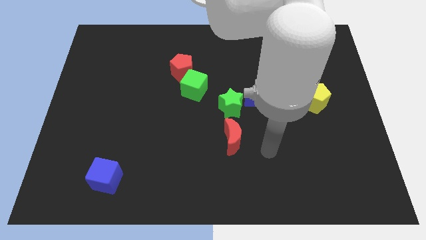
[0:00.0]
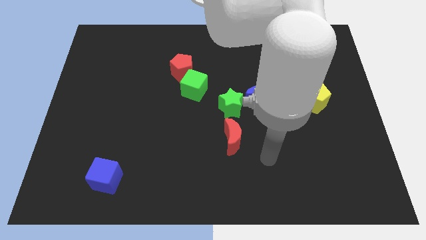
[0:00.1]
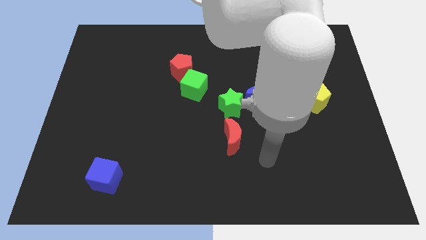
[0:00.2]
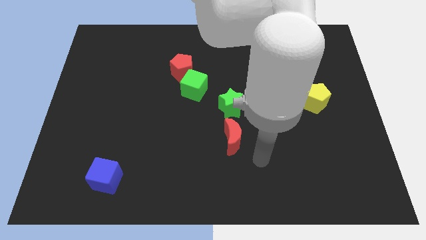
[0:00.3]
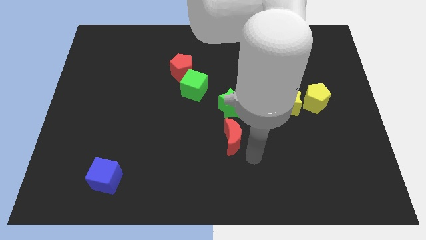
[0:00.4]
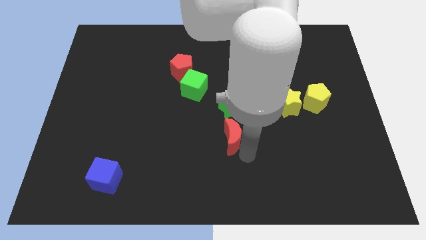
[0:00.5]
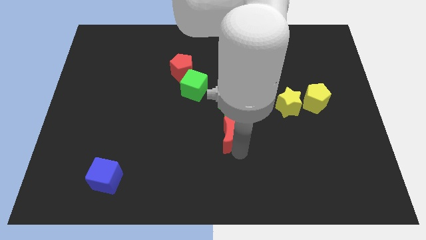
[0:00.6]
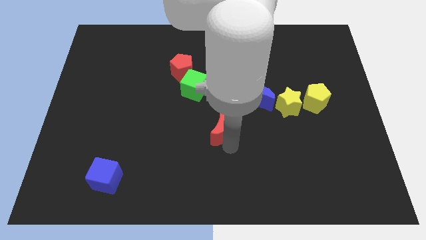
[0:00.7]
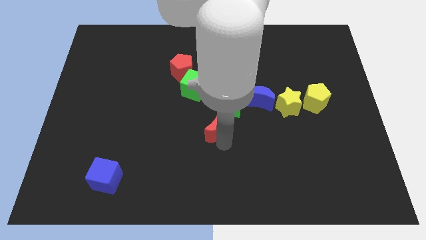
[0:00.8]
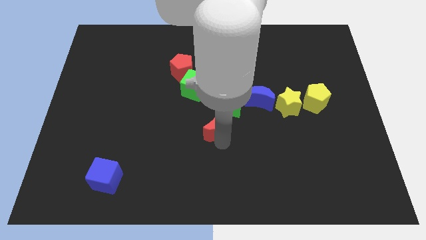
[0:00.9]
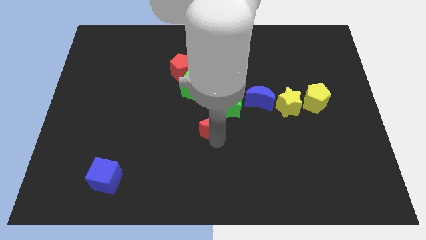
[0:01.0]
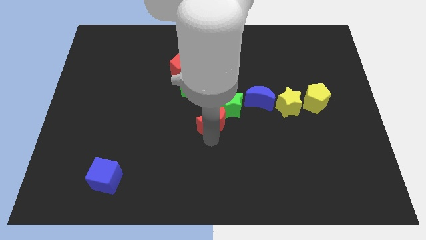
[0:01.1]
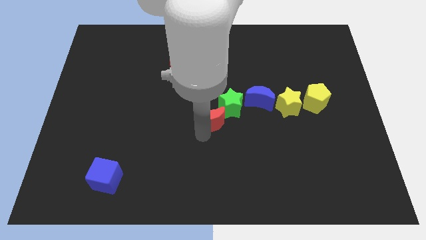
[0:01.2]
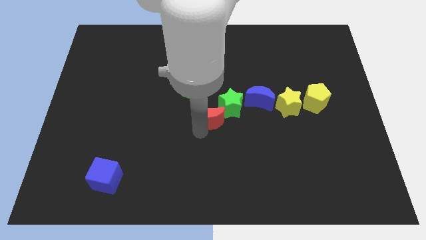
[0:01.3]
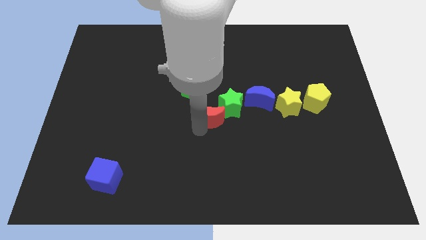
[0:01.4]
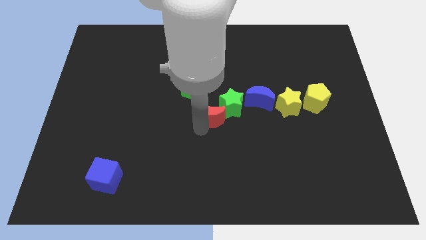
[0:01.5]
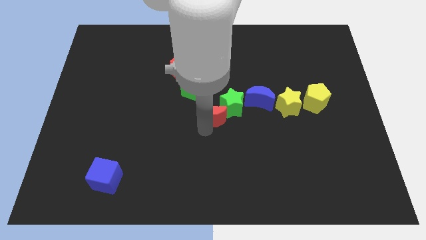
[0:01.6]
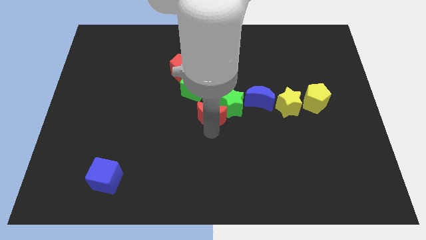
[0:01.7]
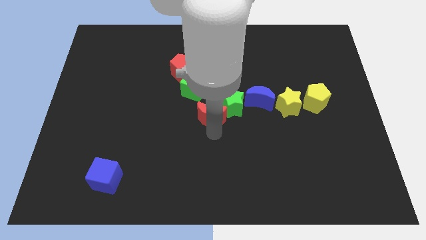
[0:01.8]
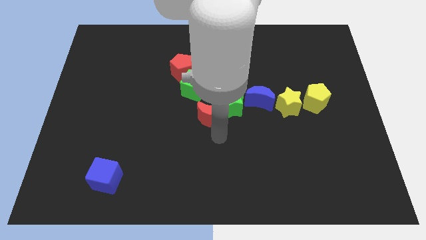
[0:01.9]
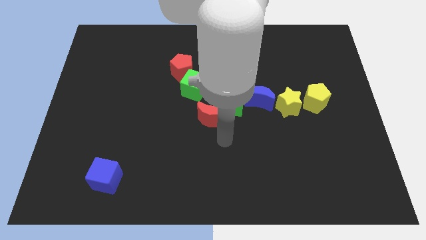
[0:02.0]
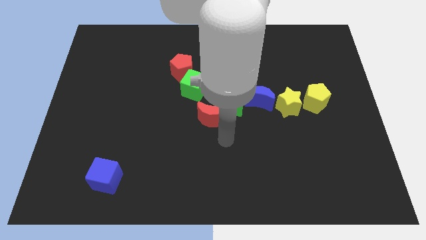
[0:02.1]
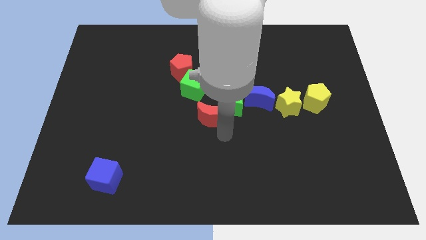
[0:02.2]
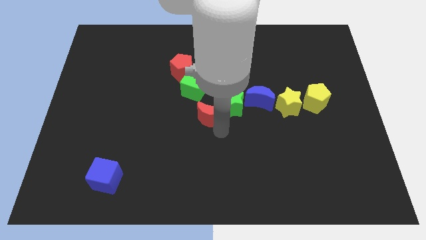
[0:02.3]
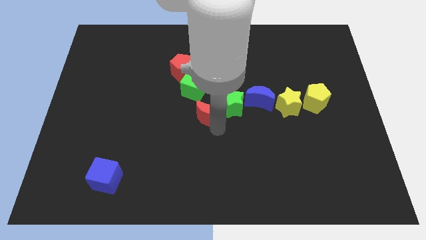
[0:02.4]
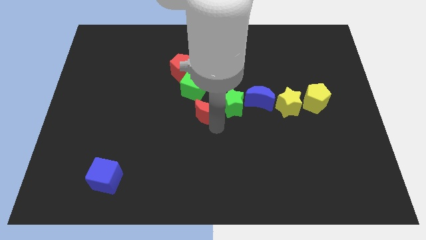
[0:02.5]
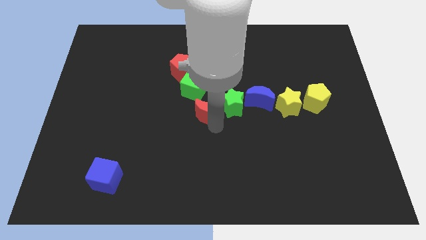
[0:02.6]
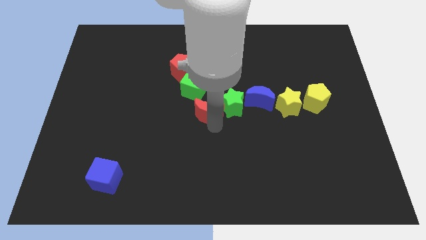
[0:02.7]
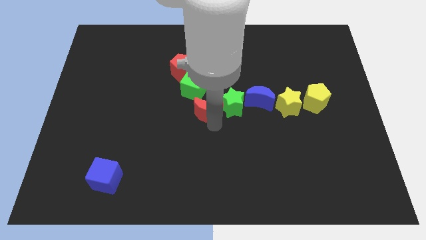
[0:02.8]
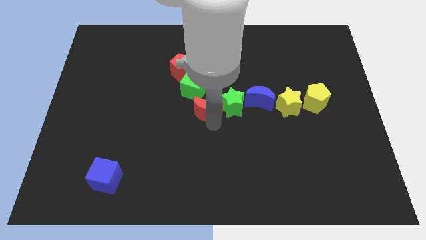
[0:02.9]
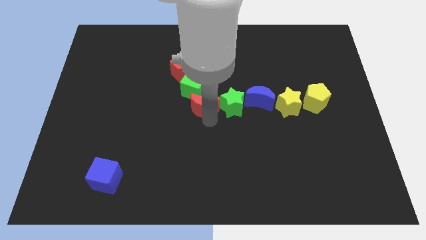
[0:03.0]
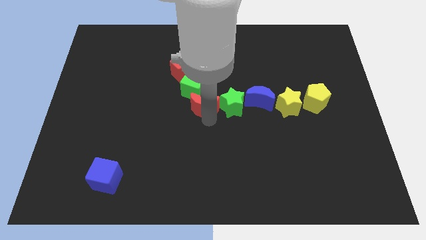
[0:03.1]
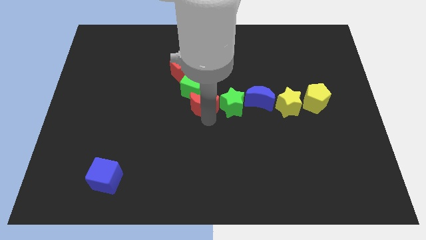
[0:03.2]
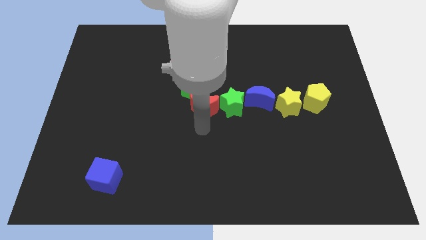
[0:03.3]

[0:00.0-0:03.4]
push red crescent beside green star

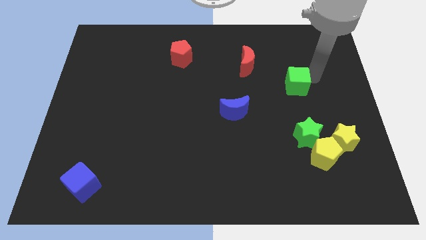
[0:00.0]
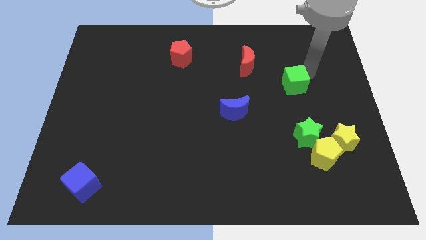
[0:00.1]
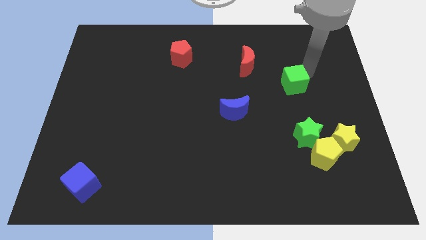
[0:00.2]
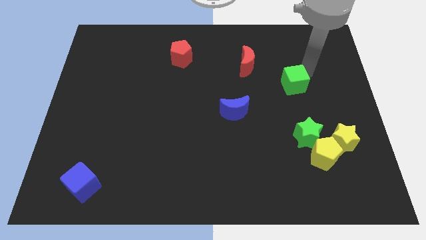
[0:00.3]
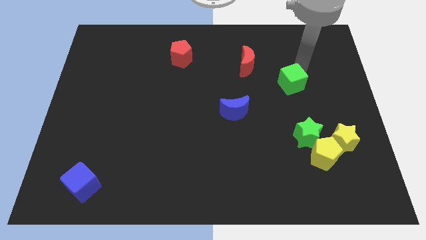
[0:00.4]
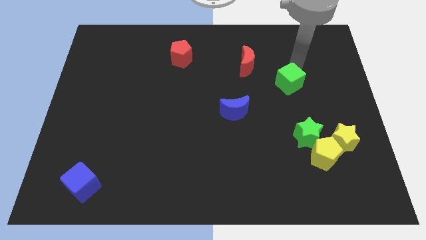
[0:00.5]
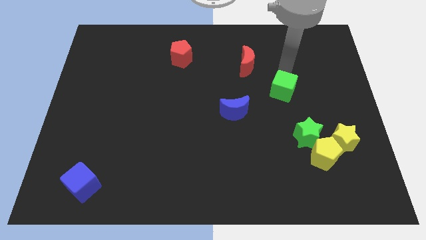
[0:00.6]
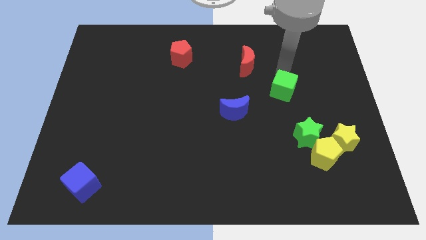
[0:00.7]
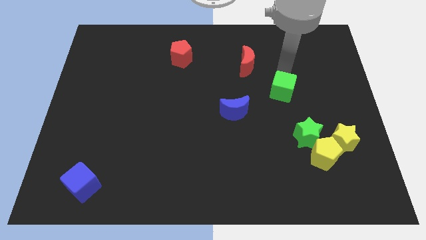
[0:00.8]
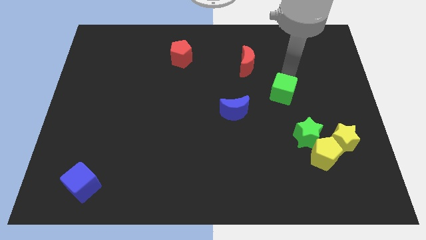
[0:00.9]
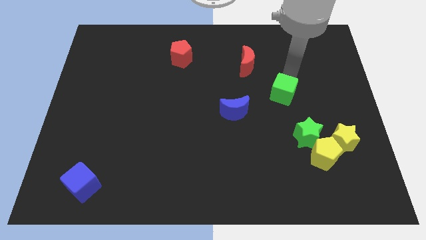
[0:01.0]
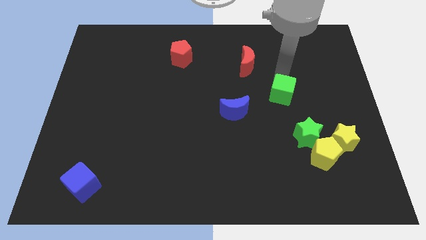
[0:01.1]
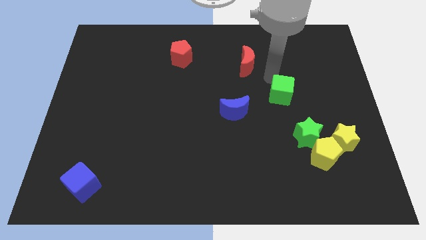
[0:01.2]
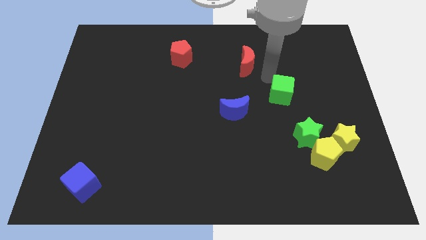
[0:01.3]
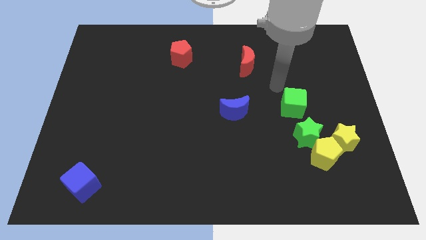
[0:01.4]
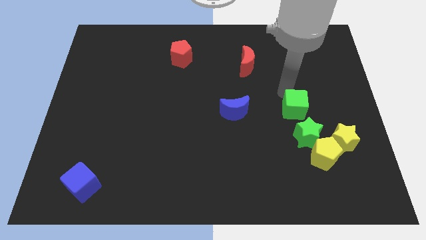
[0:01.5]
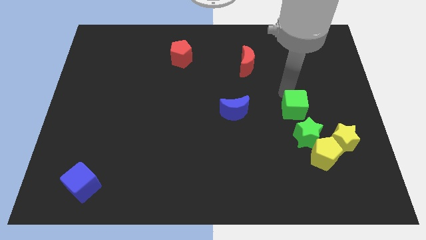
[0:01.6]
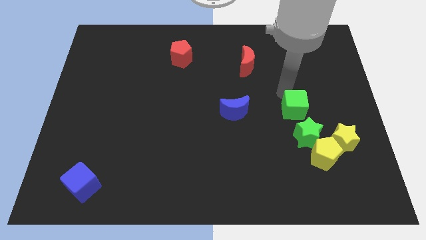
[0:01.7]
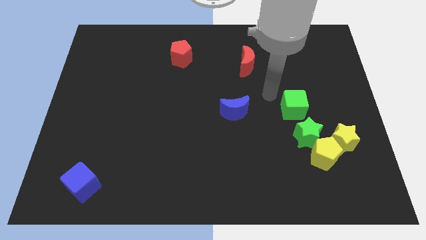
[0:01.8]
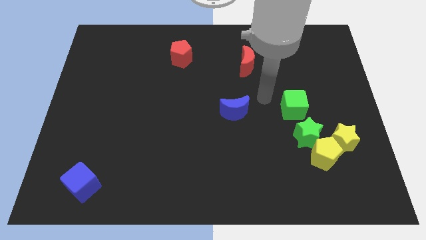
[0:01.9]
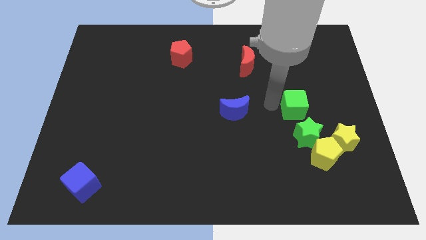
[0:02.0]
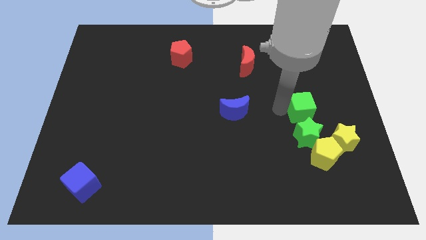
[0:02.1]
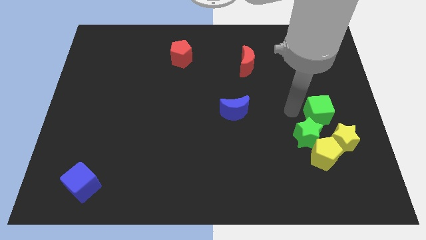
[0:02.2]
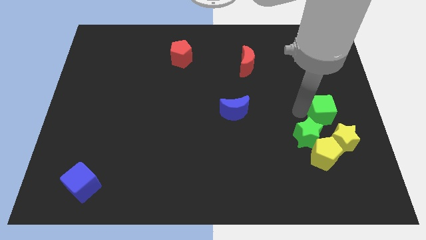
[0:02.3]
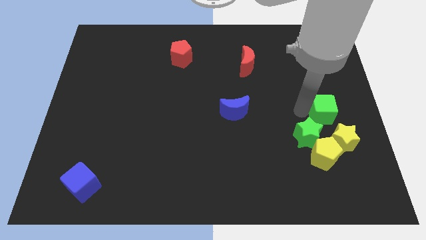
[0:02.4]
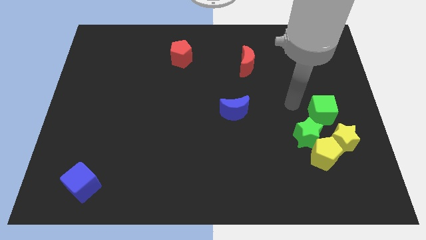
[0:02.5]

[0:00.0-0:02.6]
move the green cube diagonal to the green star

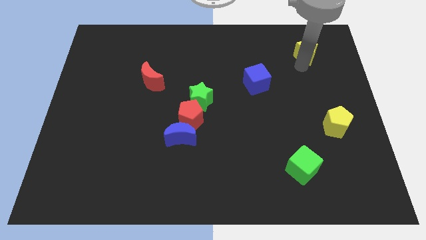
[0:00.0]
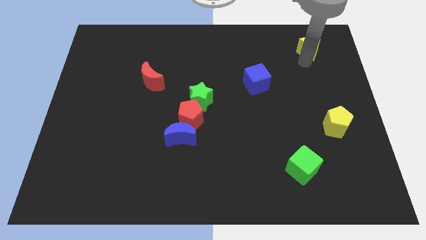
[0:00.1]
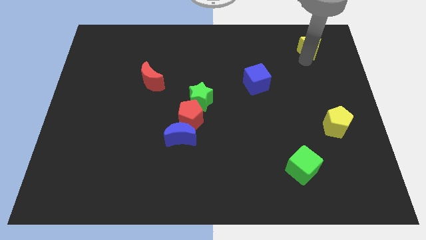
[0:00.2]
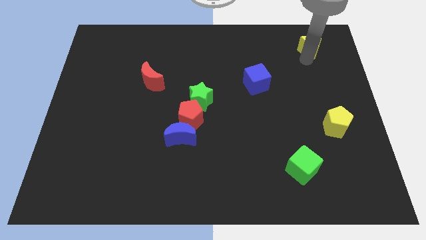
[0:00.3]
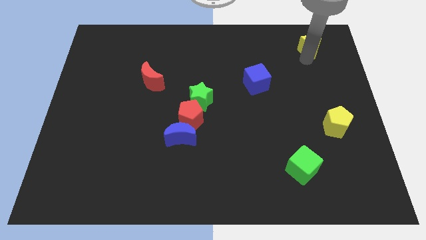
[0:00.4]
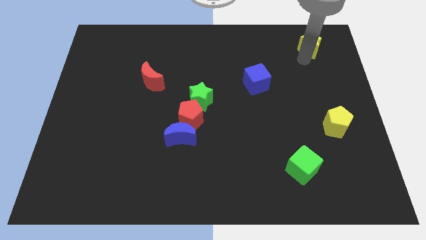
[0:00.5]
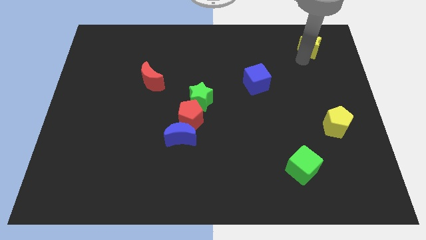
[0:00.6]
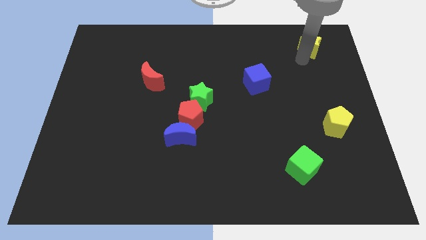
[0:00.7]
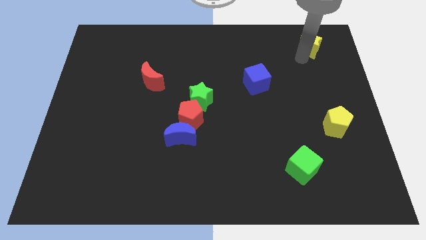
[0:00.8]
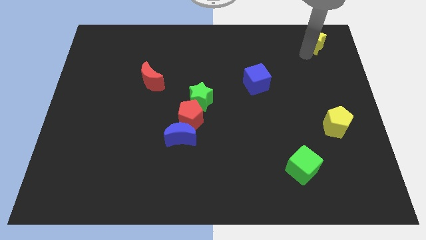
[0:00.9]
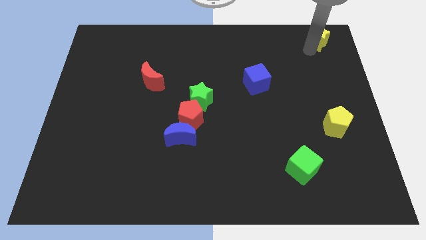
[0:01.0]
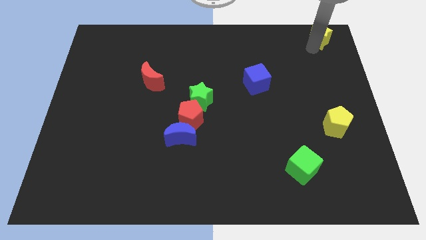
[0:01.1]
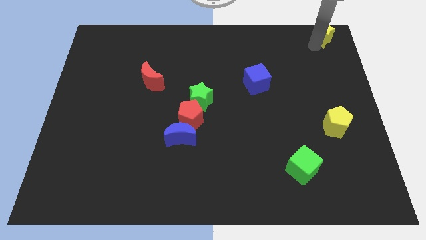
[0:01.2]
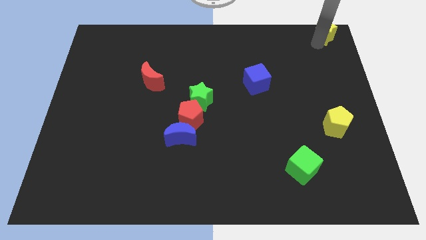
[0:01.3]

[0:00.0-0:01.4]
place the yellow star at the top right corner of the board

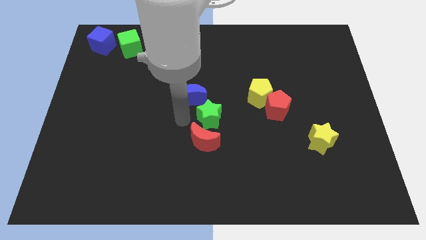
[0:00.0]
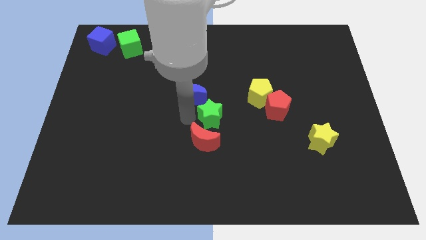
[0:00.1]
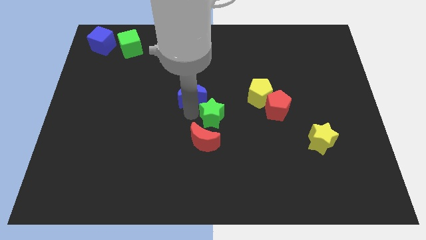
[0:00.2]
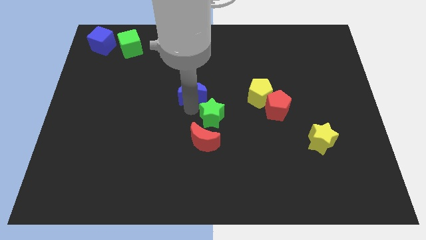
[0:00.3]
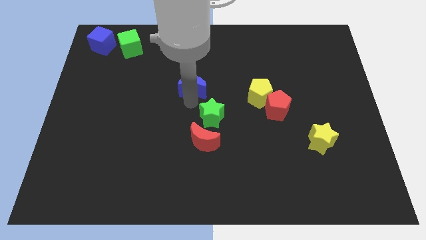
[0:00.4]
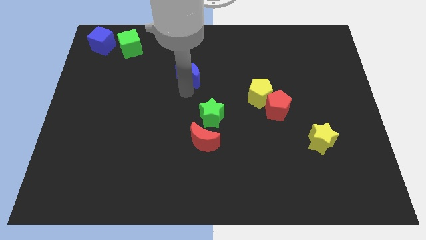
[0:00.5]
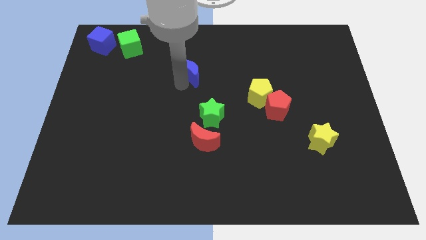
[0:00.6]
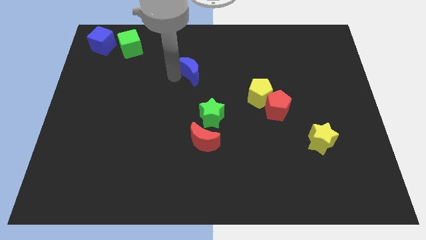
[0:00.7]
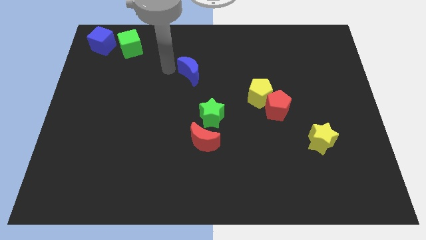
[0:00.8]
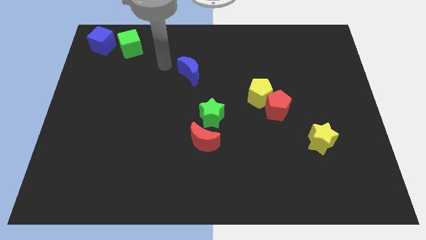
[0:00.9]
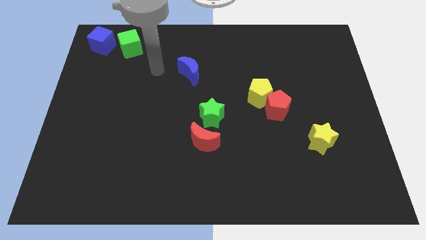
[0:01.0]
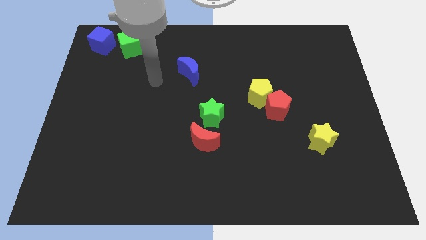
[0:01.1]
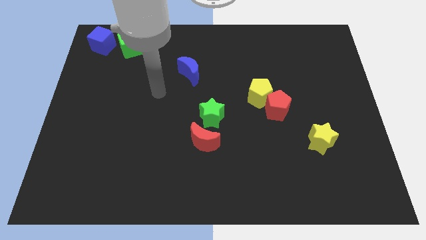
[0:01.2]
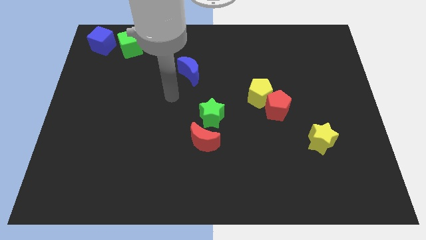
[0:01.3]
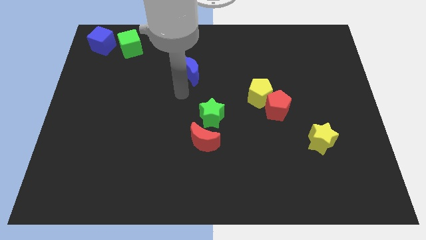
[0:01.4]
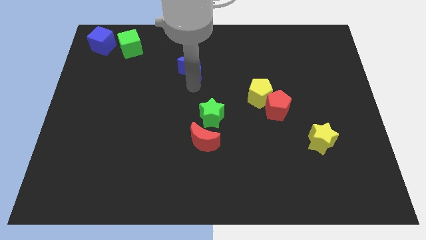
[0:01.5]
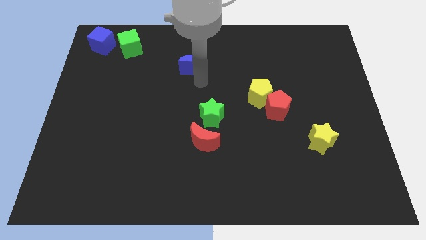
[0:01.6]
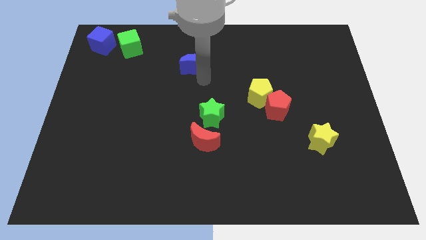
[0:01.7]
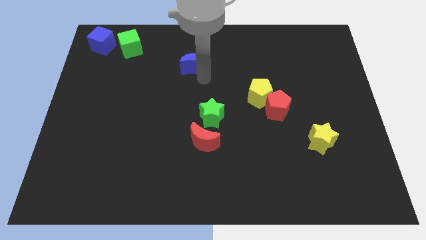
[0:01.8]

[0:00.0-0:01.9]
separate the blue cube from the green star
